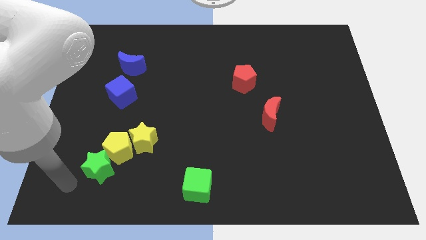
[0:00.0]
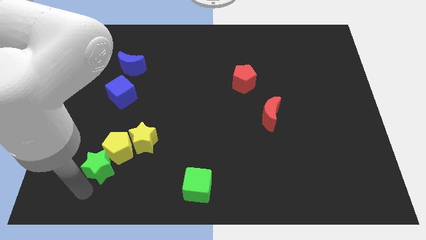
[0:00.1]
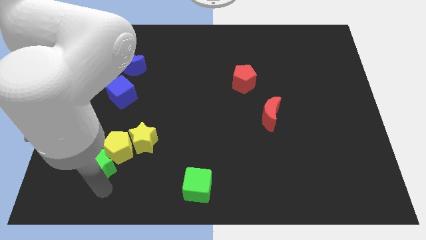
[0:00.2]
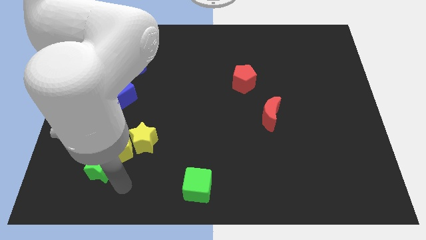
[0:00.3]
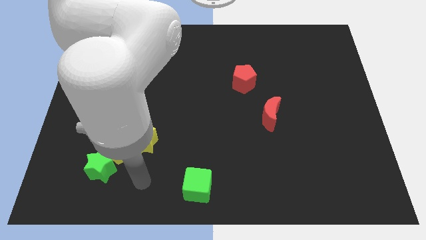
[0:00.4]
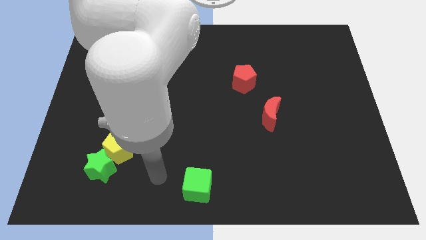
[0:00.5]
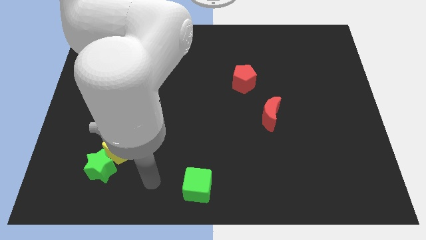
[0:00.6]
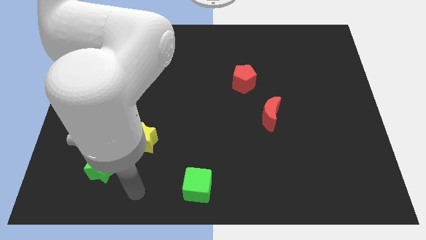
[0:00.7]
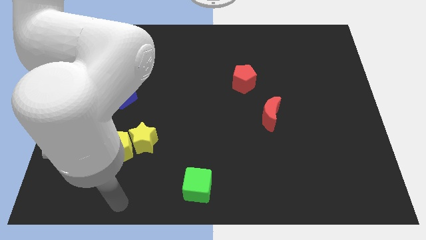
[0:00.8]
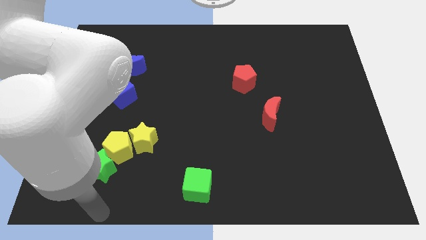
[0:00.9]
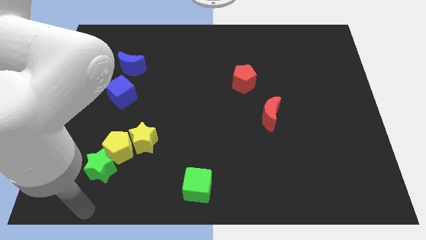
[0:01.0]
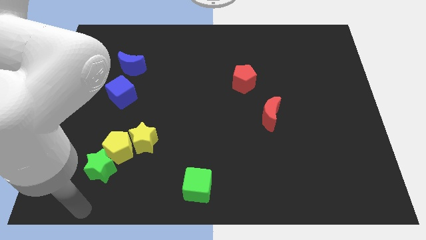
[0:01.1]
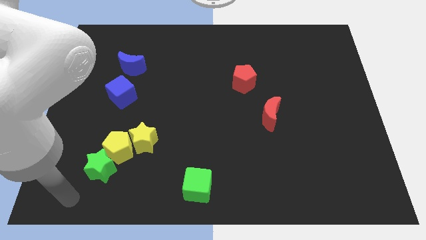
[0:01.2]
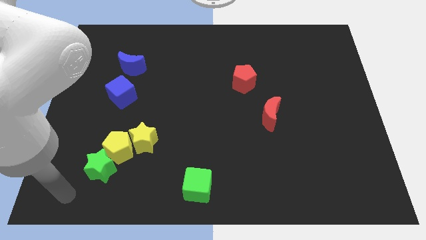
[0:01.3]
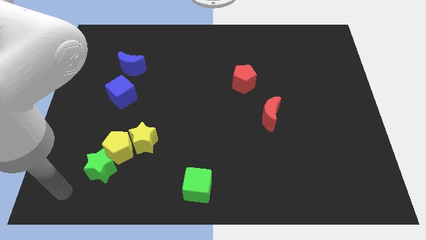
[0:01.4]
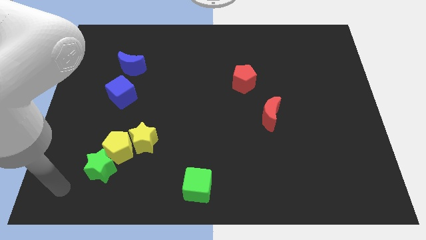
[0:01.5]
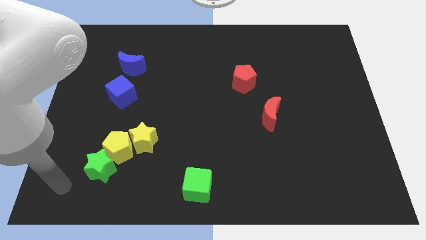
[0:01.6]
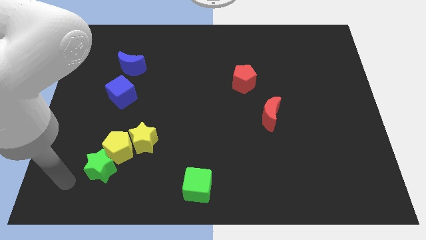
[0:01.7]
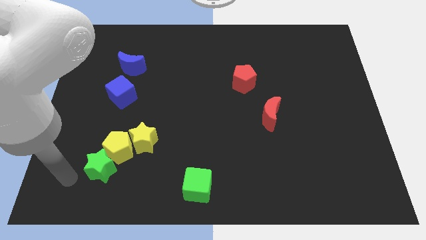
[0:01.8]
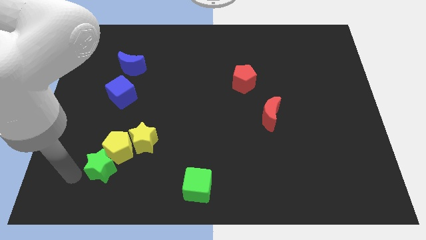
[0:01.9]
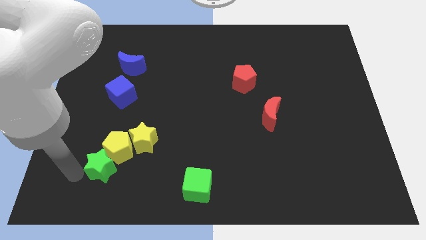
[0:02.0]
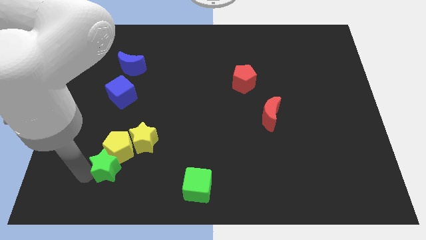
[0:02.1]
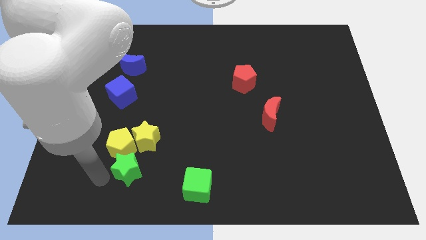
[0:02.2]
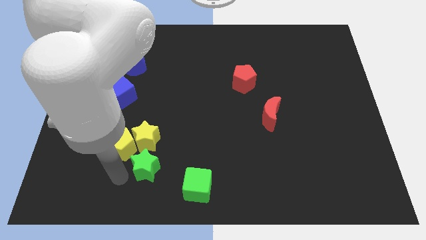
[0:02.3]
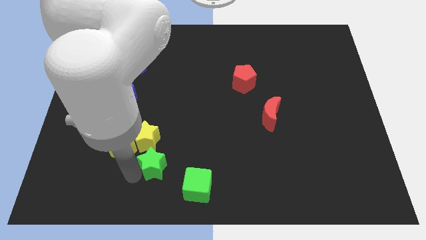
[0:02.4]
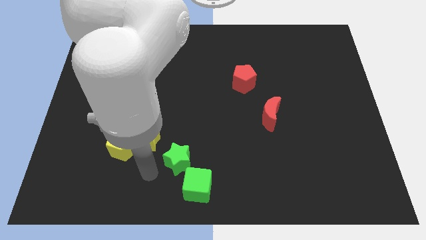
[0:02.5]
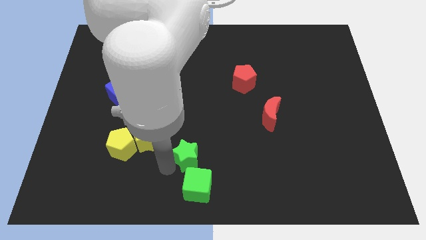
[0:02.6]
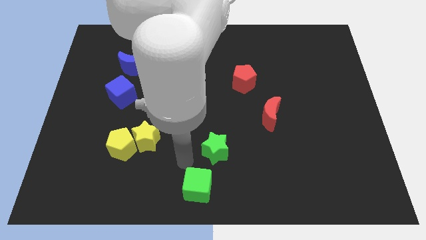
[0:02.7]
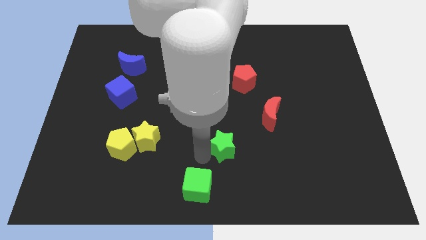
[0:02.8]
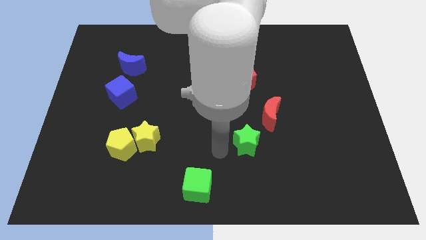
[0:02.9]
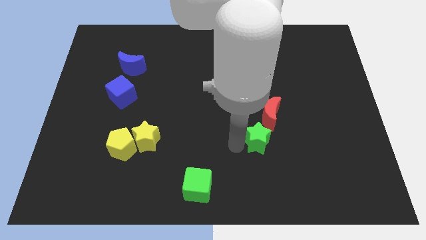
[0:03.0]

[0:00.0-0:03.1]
slide green star to the bottom left of red moon

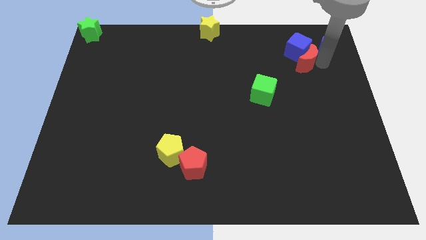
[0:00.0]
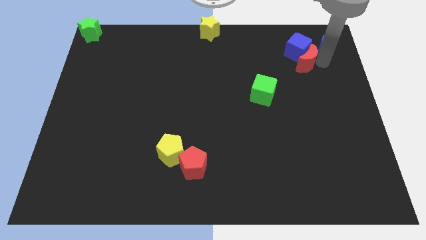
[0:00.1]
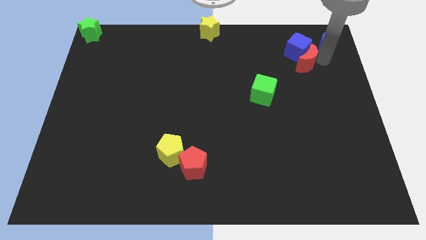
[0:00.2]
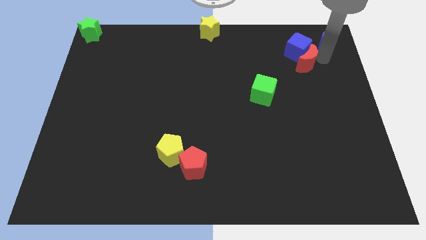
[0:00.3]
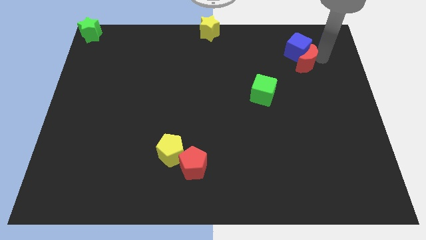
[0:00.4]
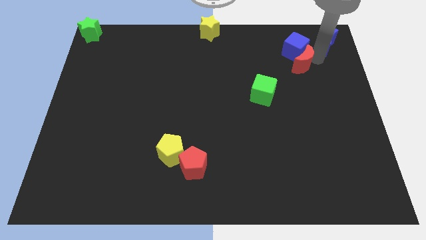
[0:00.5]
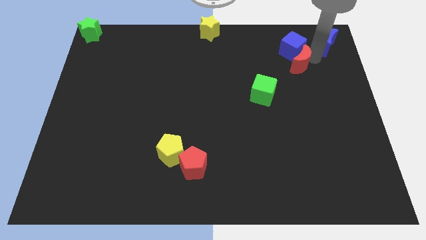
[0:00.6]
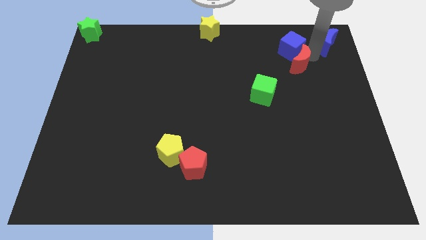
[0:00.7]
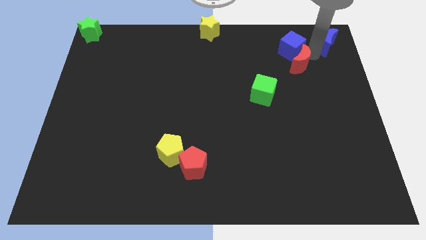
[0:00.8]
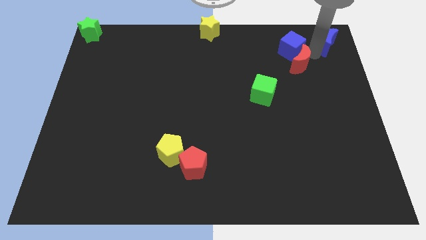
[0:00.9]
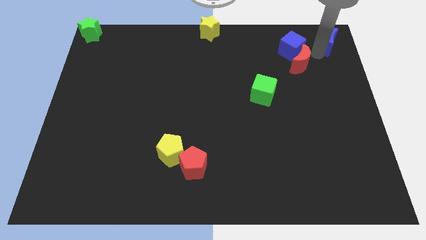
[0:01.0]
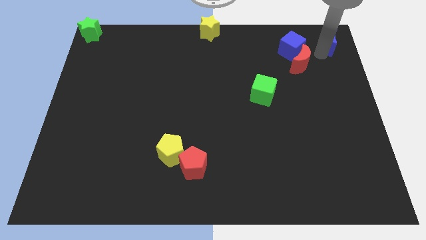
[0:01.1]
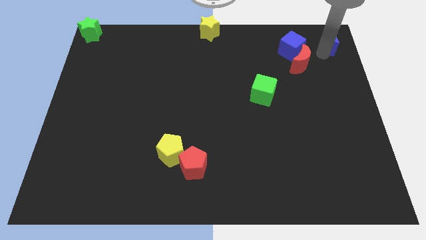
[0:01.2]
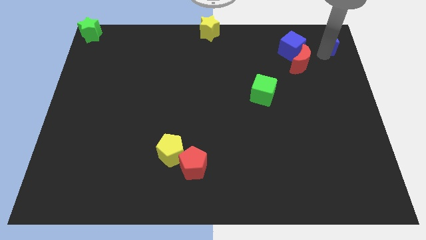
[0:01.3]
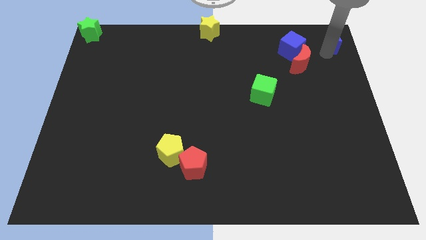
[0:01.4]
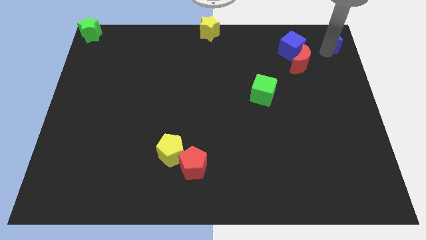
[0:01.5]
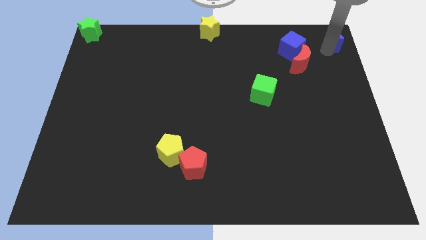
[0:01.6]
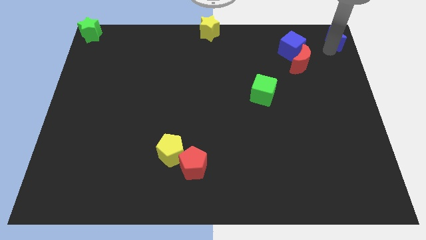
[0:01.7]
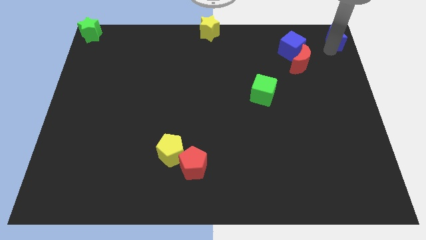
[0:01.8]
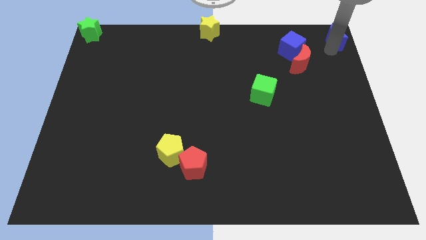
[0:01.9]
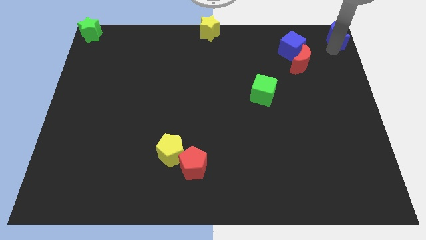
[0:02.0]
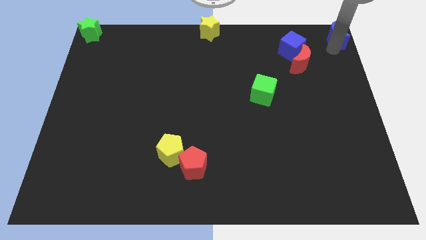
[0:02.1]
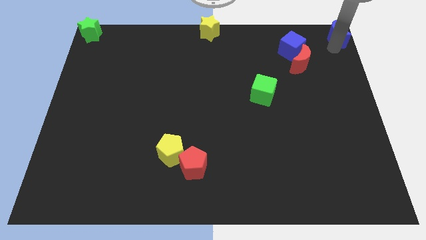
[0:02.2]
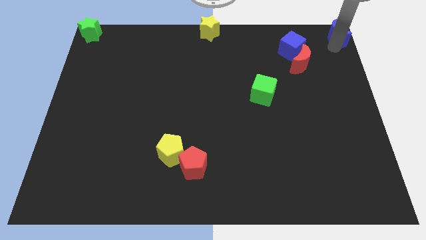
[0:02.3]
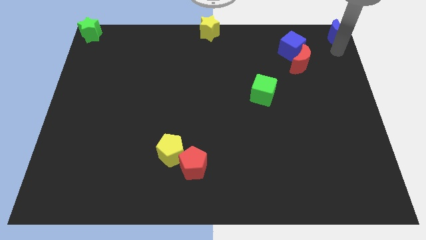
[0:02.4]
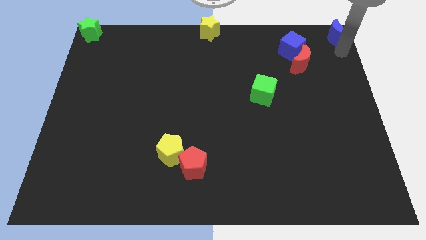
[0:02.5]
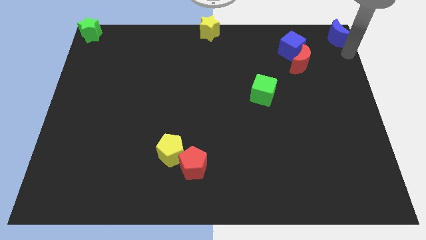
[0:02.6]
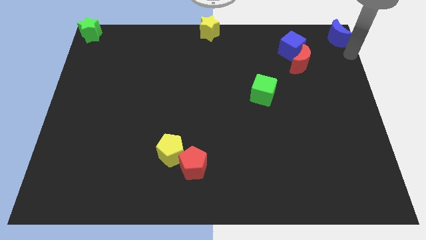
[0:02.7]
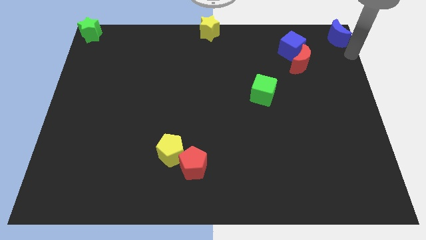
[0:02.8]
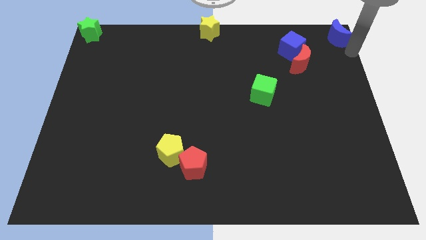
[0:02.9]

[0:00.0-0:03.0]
separate blue moon away from red moon

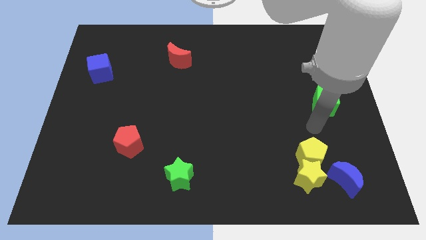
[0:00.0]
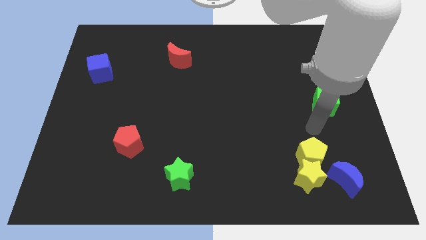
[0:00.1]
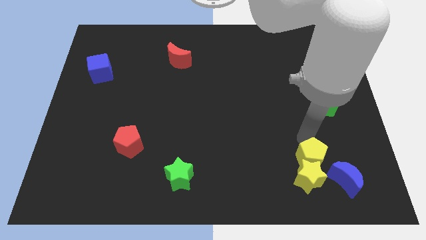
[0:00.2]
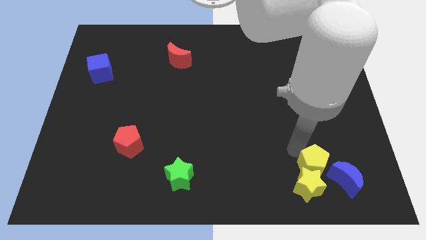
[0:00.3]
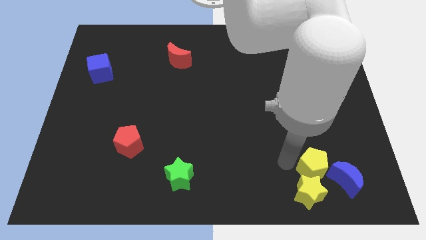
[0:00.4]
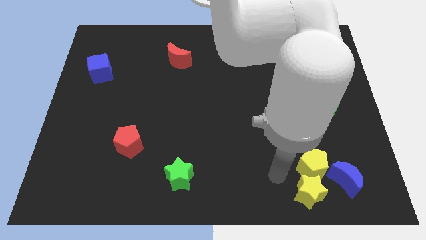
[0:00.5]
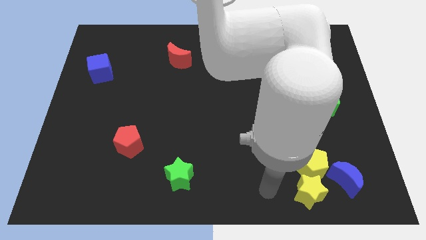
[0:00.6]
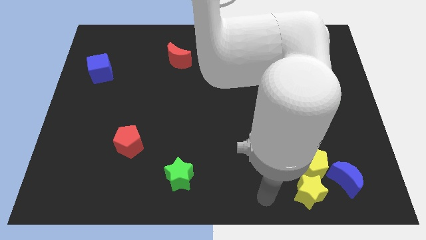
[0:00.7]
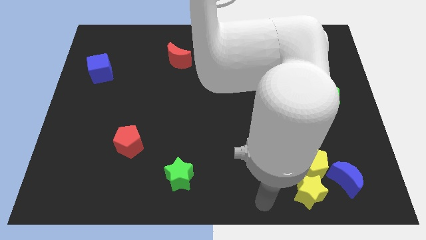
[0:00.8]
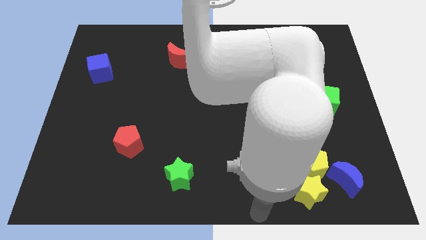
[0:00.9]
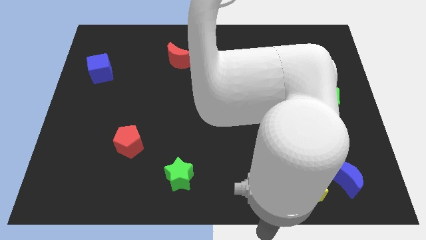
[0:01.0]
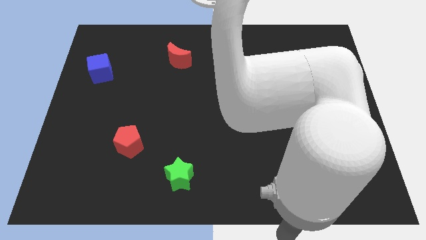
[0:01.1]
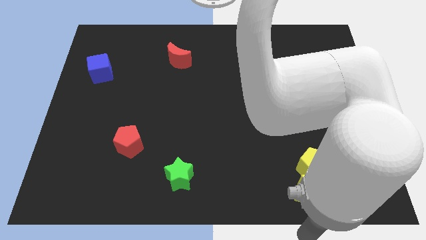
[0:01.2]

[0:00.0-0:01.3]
slightly push the yellow blocks towards the bottom side

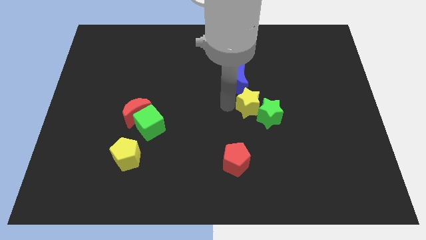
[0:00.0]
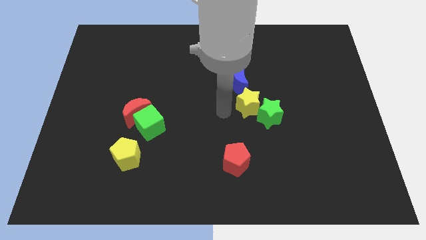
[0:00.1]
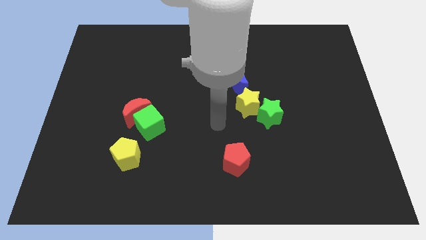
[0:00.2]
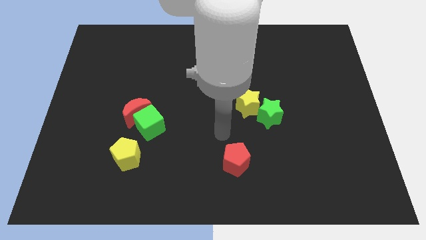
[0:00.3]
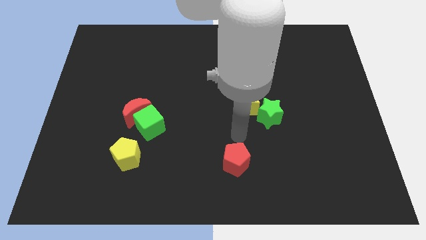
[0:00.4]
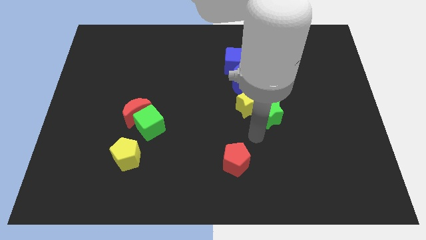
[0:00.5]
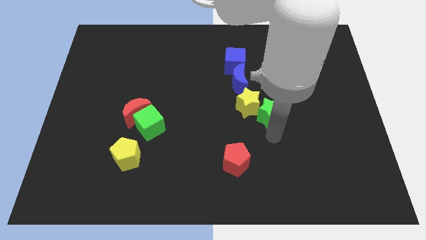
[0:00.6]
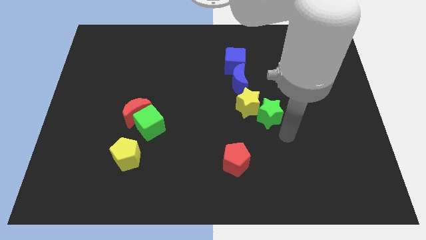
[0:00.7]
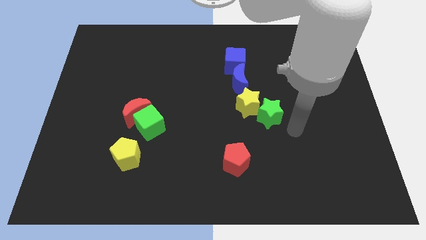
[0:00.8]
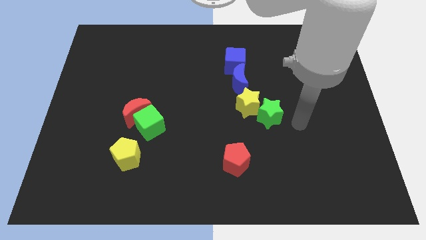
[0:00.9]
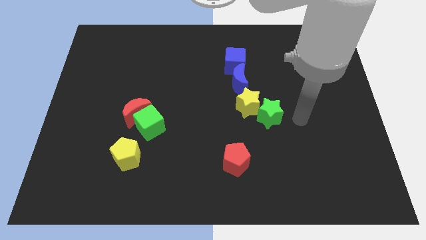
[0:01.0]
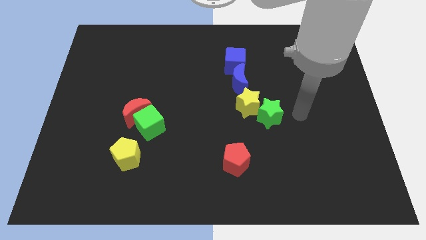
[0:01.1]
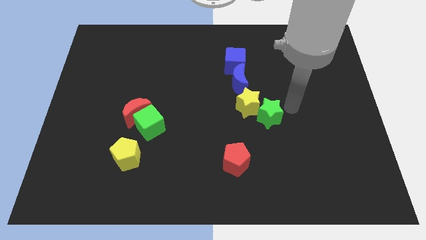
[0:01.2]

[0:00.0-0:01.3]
point your hand at the right side of the green star

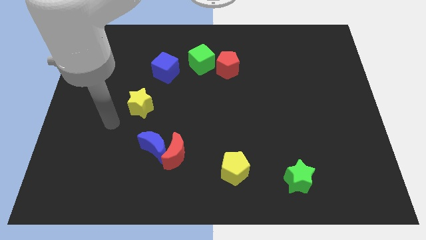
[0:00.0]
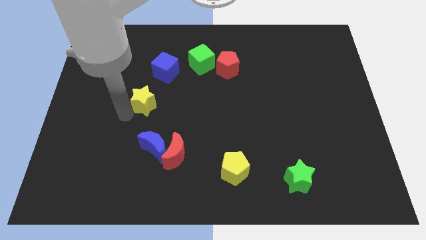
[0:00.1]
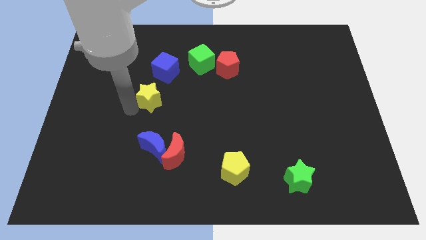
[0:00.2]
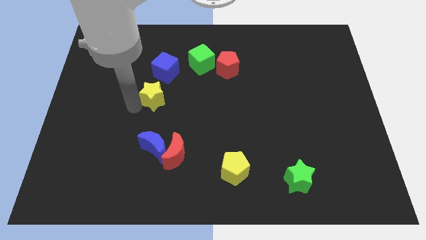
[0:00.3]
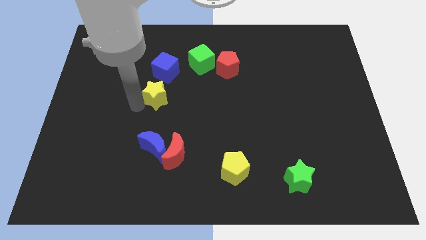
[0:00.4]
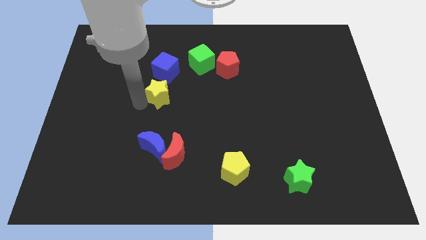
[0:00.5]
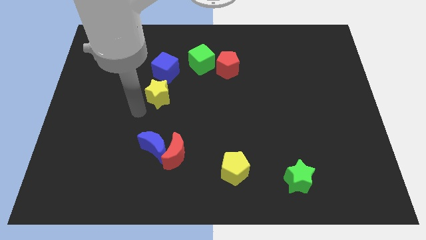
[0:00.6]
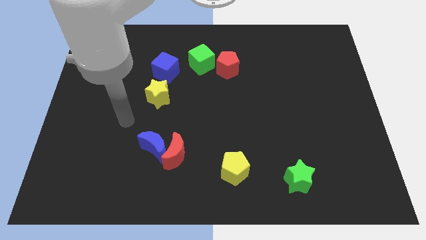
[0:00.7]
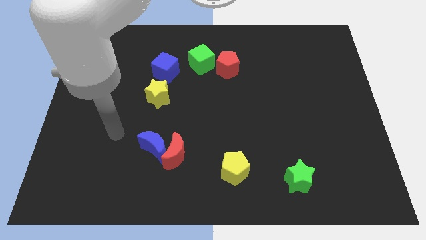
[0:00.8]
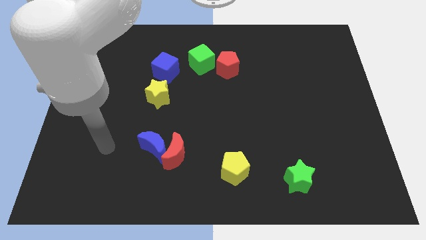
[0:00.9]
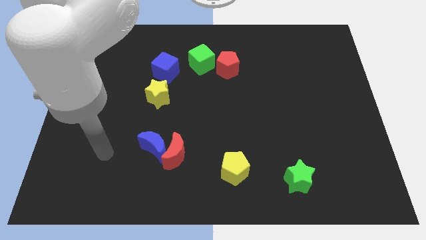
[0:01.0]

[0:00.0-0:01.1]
place the yellow star below the blue cube
